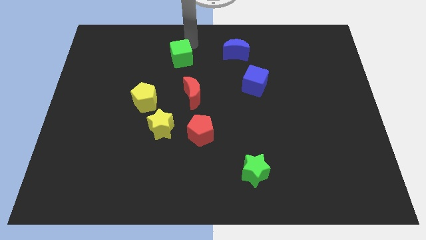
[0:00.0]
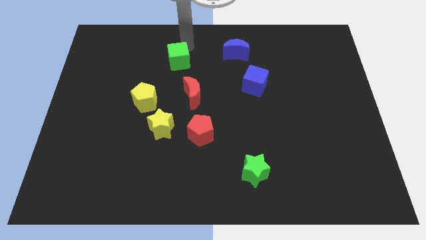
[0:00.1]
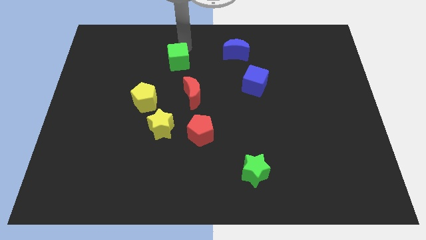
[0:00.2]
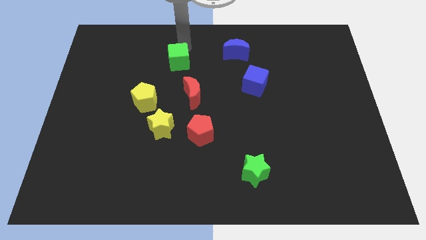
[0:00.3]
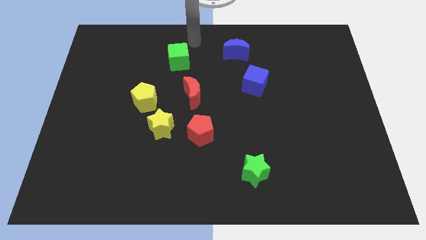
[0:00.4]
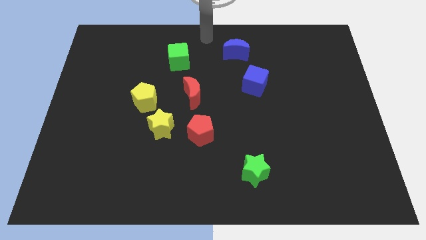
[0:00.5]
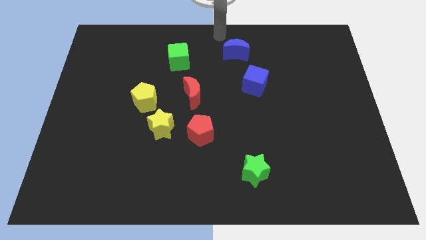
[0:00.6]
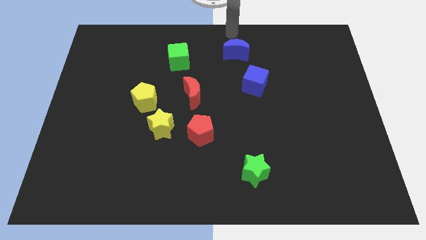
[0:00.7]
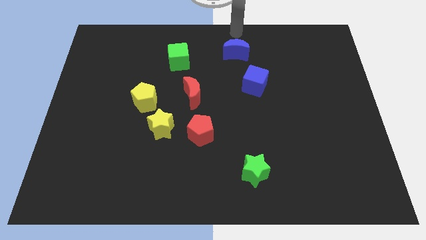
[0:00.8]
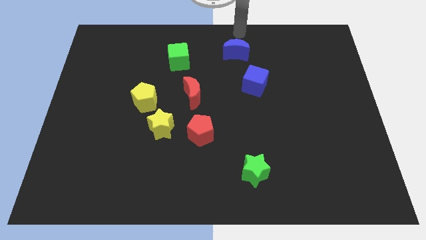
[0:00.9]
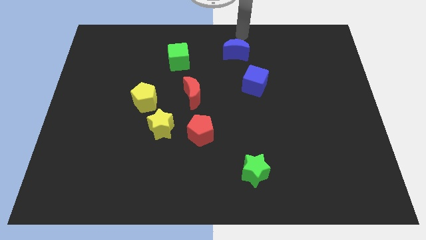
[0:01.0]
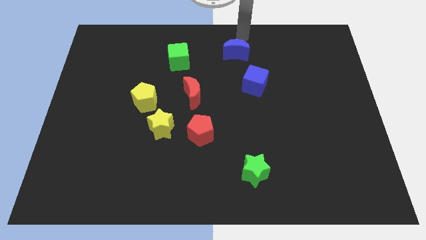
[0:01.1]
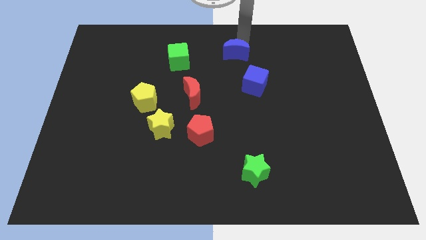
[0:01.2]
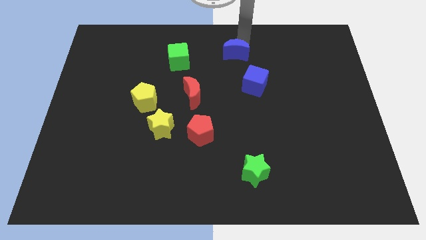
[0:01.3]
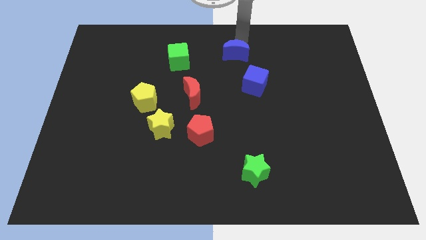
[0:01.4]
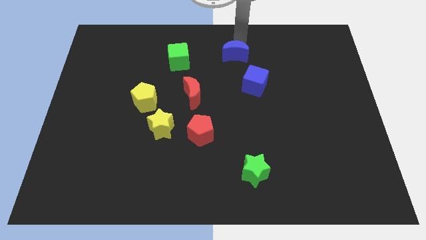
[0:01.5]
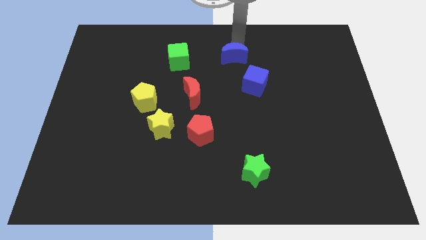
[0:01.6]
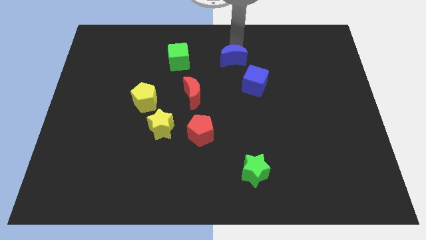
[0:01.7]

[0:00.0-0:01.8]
touch the top of the blue moon

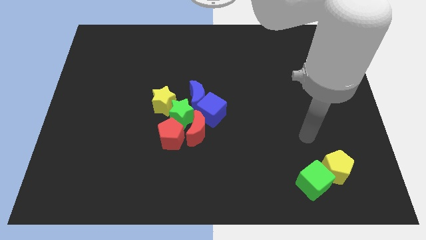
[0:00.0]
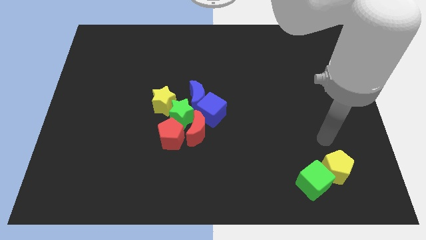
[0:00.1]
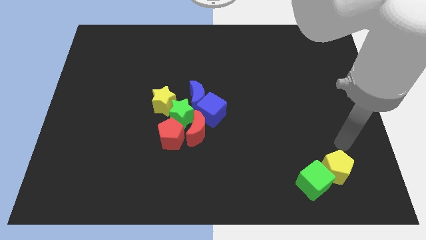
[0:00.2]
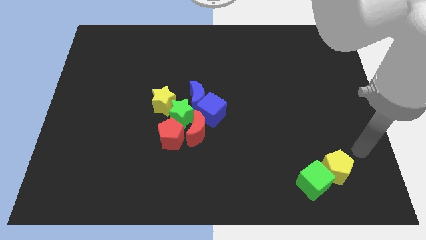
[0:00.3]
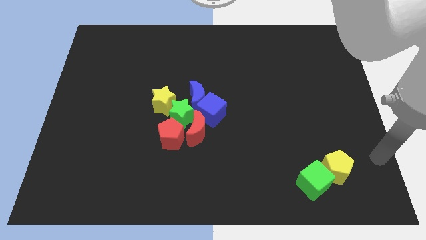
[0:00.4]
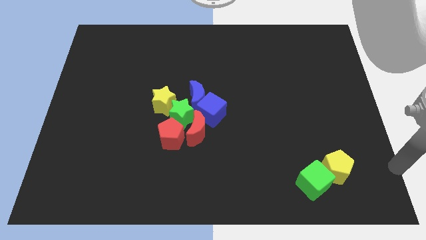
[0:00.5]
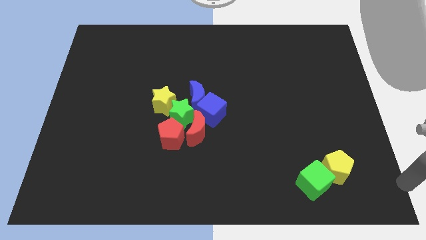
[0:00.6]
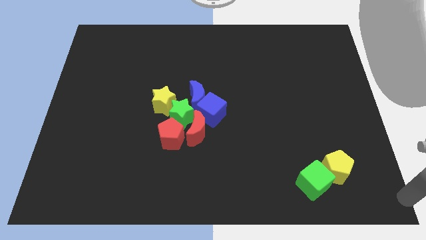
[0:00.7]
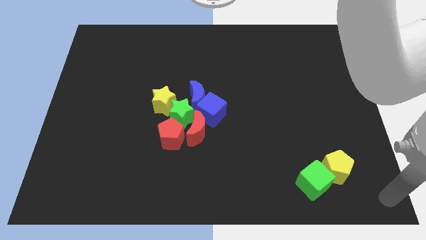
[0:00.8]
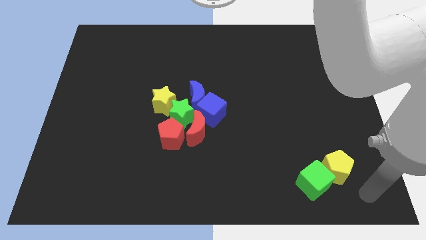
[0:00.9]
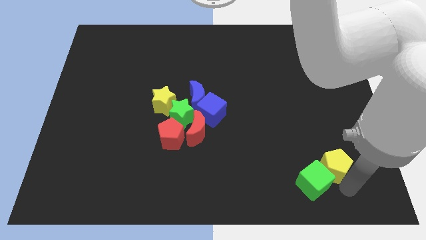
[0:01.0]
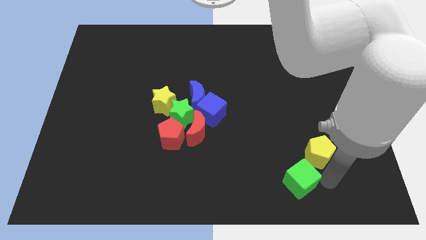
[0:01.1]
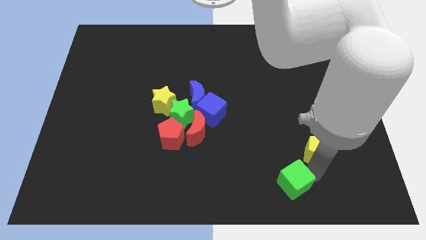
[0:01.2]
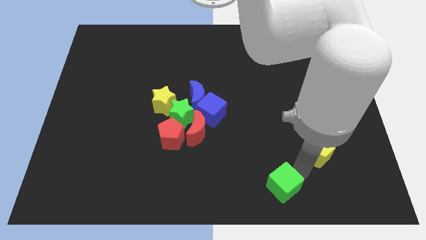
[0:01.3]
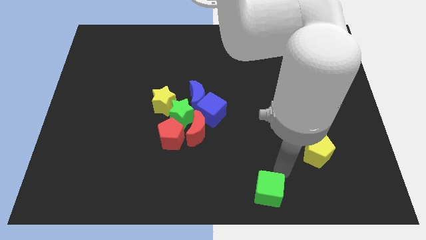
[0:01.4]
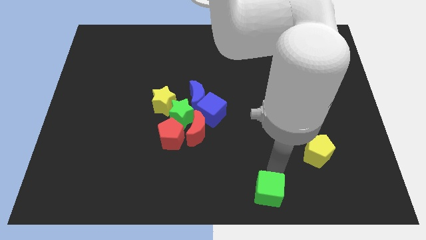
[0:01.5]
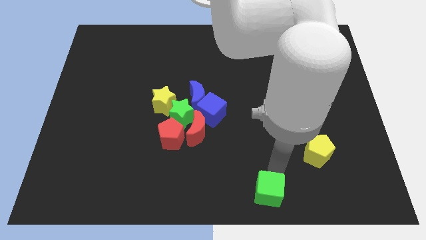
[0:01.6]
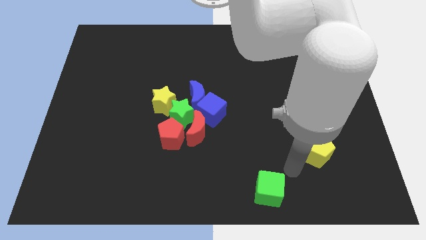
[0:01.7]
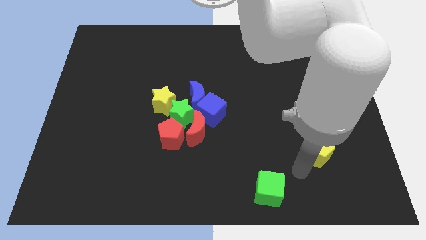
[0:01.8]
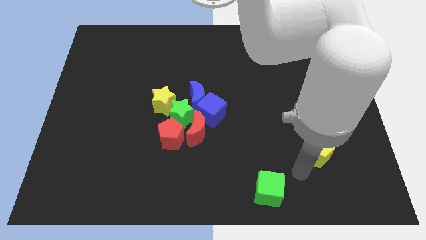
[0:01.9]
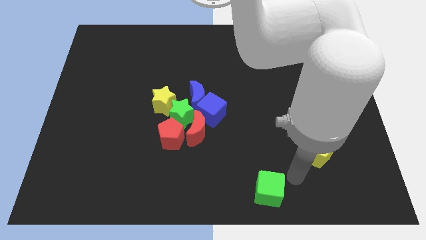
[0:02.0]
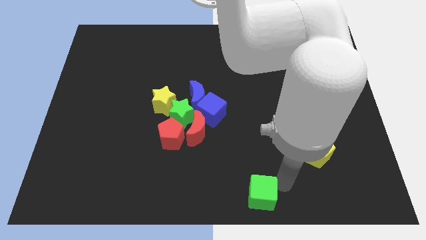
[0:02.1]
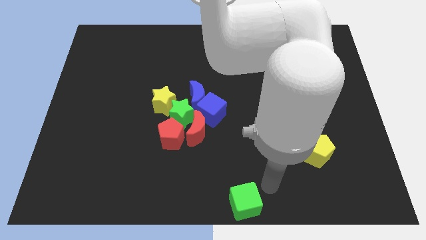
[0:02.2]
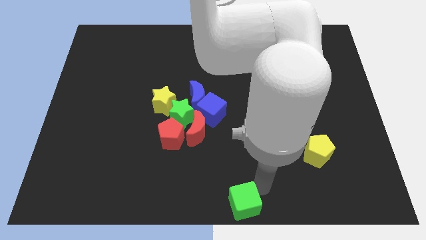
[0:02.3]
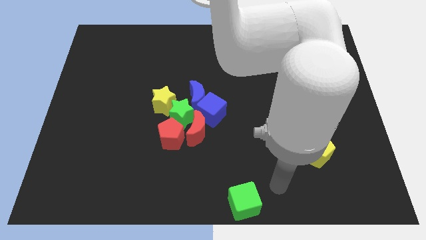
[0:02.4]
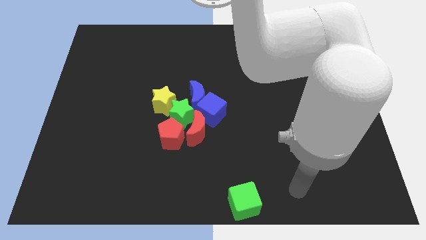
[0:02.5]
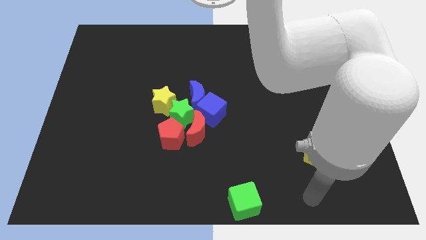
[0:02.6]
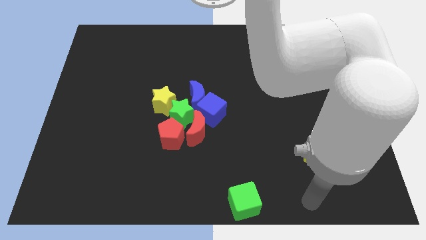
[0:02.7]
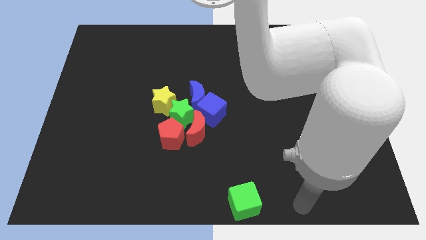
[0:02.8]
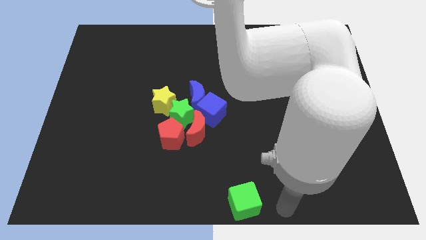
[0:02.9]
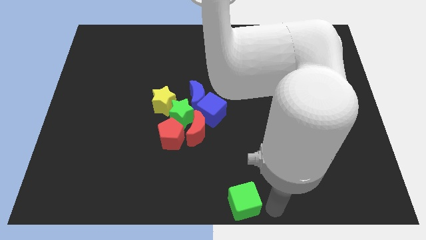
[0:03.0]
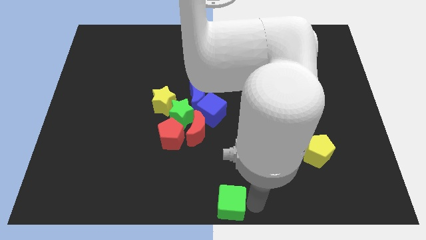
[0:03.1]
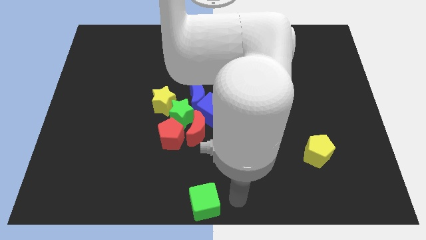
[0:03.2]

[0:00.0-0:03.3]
move the green cube to the bottom center

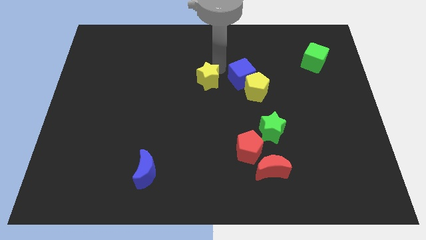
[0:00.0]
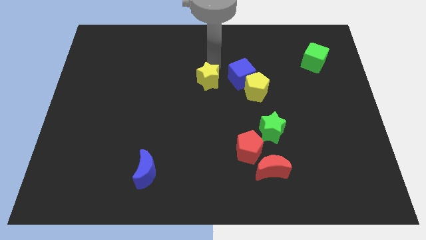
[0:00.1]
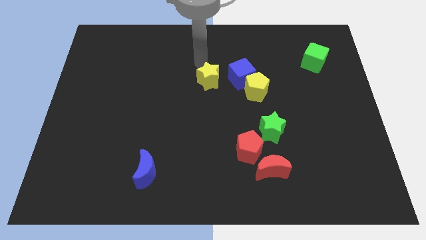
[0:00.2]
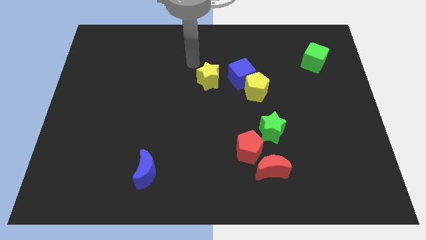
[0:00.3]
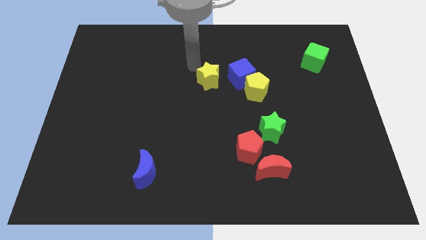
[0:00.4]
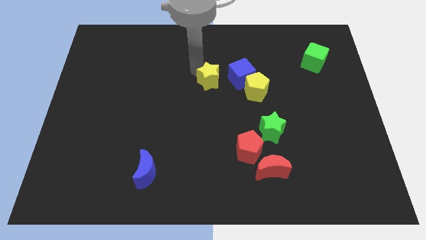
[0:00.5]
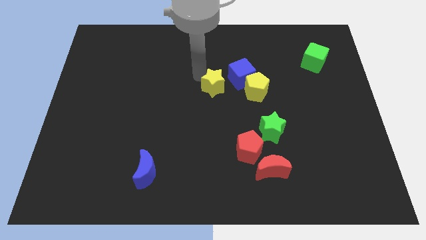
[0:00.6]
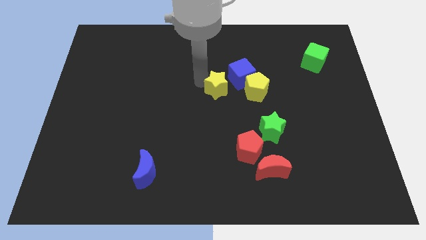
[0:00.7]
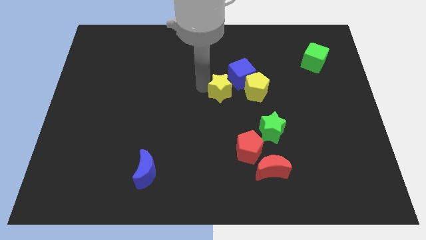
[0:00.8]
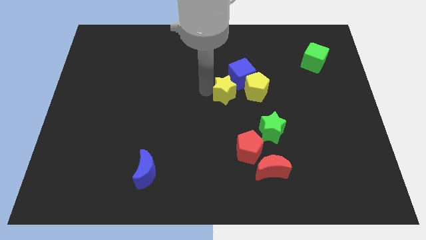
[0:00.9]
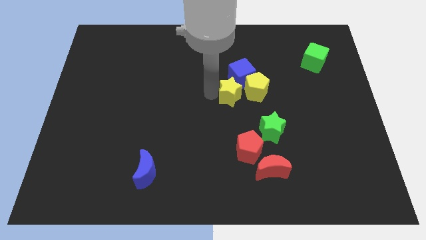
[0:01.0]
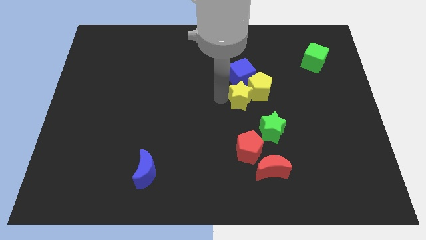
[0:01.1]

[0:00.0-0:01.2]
move the yellow star to the left of the yellow pentagon

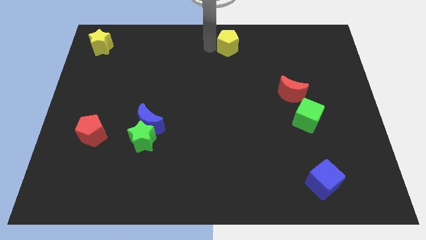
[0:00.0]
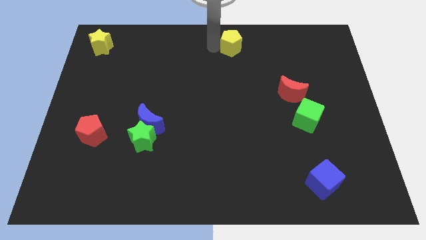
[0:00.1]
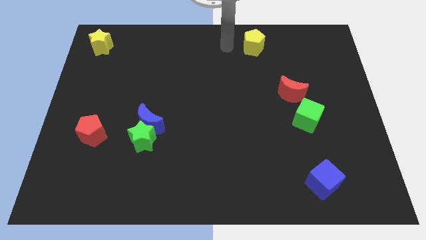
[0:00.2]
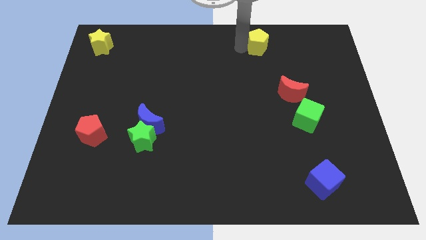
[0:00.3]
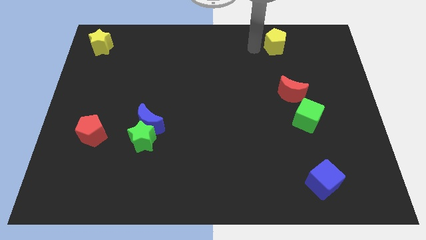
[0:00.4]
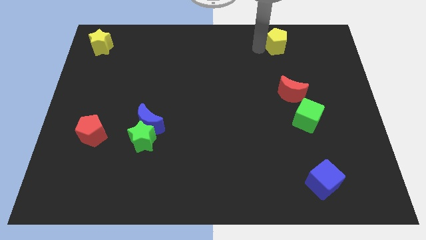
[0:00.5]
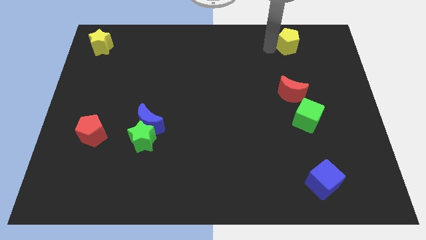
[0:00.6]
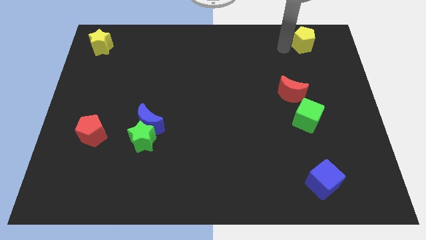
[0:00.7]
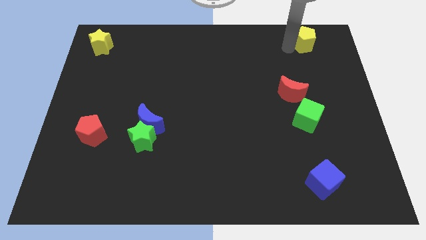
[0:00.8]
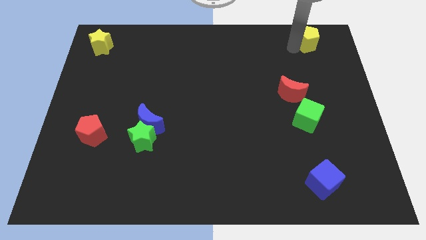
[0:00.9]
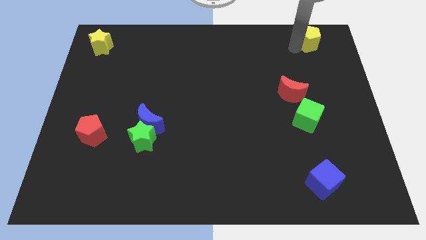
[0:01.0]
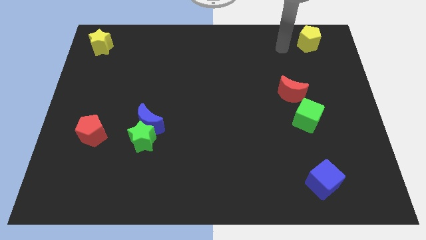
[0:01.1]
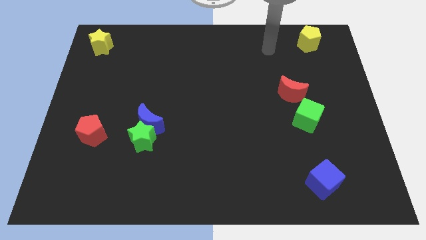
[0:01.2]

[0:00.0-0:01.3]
place the yellow pentagon at the top right of the board

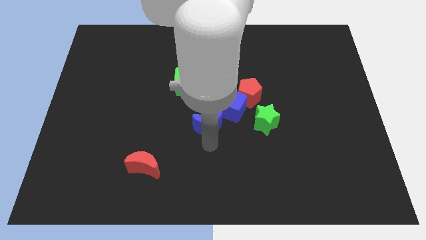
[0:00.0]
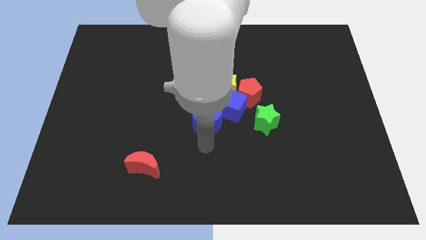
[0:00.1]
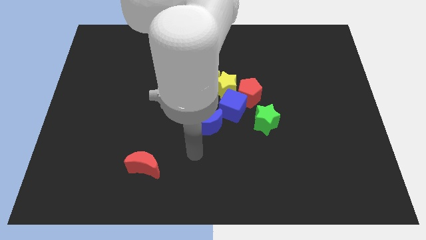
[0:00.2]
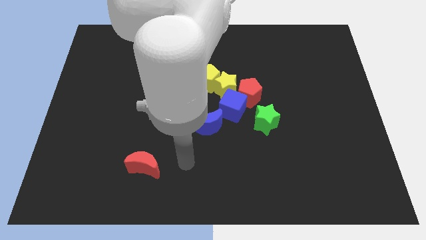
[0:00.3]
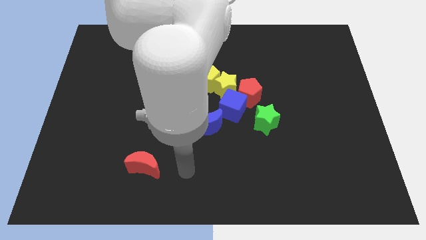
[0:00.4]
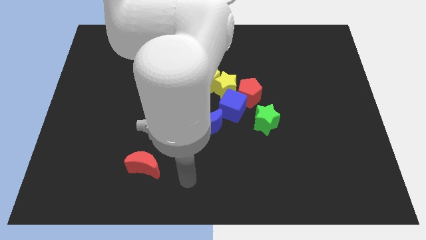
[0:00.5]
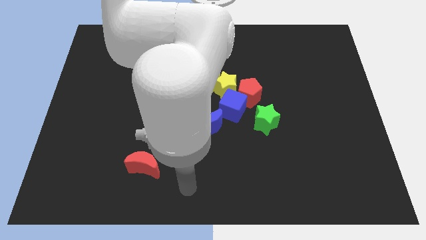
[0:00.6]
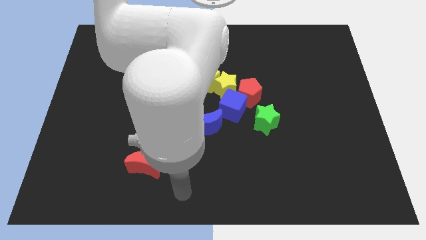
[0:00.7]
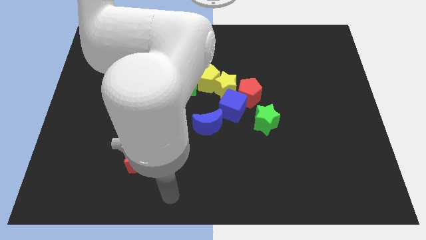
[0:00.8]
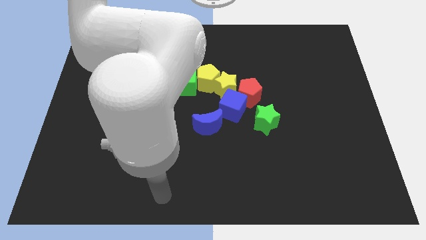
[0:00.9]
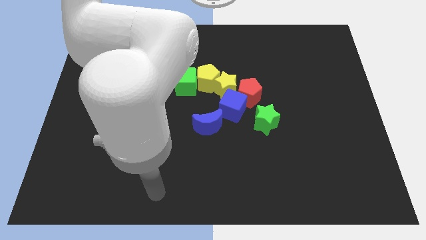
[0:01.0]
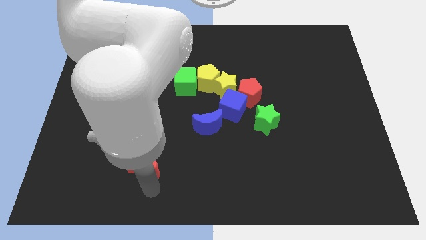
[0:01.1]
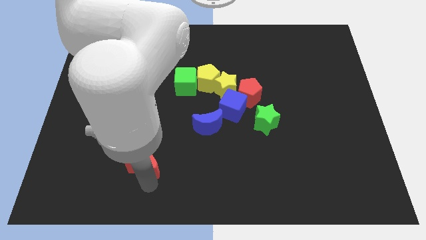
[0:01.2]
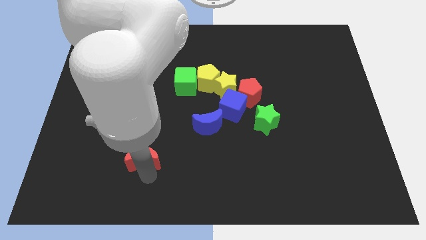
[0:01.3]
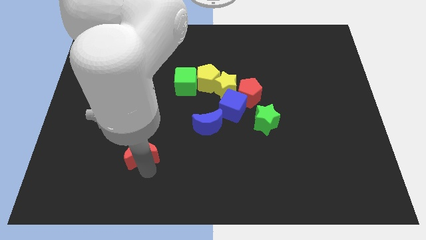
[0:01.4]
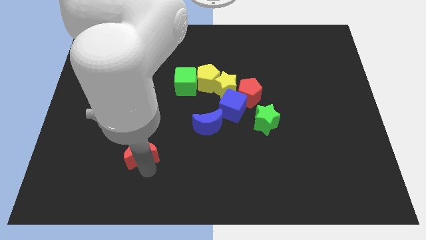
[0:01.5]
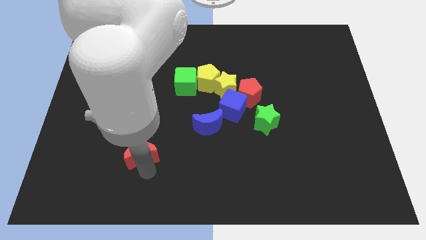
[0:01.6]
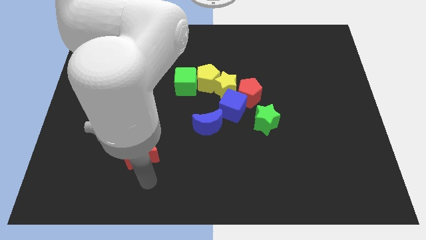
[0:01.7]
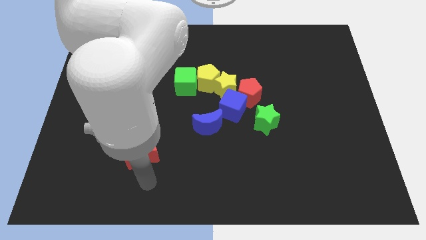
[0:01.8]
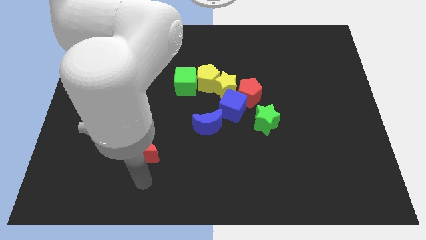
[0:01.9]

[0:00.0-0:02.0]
slightly push the red crescent towards top
